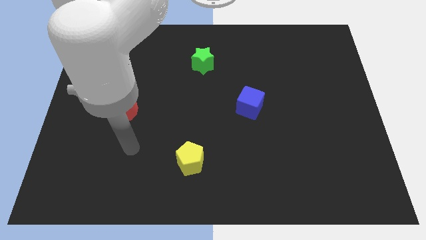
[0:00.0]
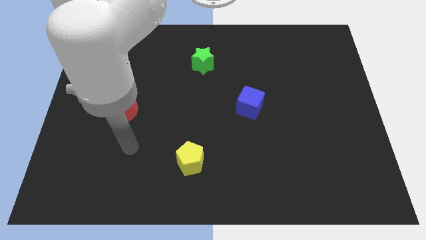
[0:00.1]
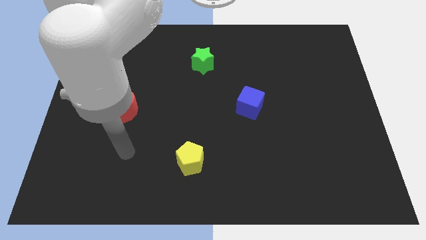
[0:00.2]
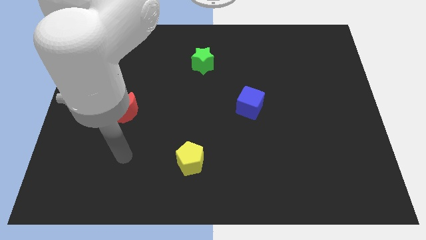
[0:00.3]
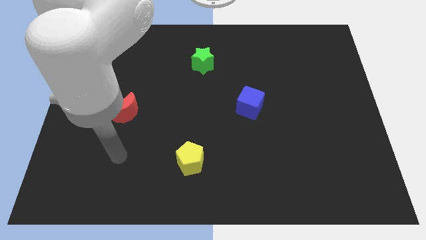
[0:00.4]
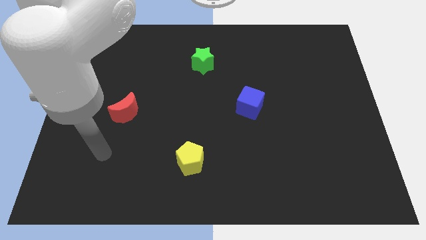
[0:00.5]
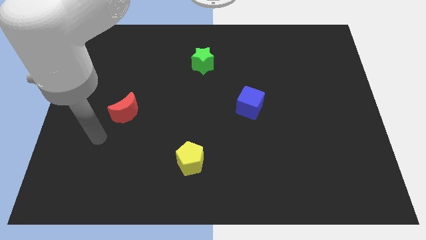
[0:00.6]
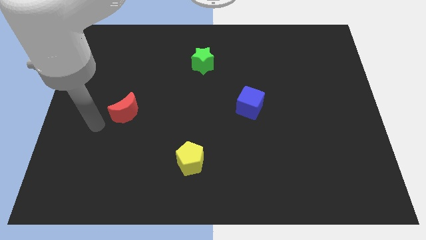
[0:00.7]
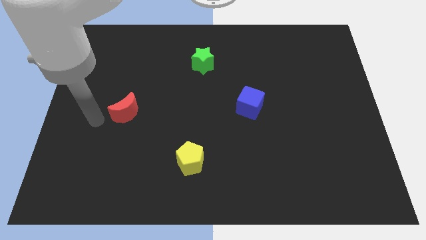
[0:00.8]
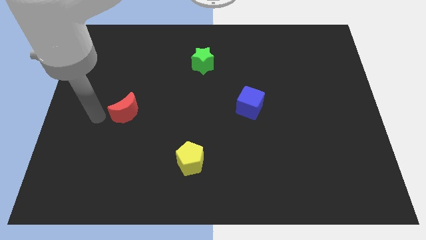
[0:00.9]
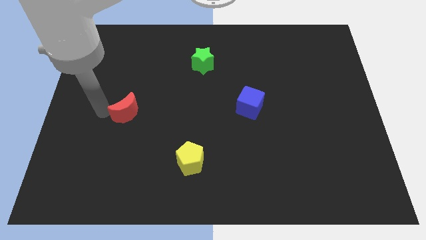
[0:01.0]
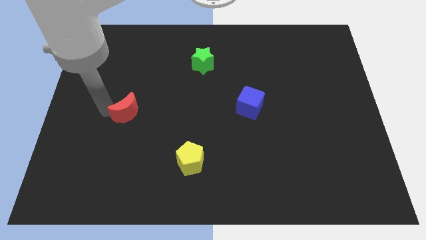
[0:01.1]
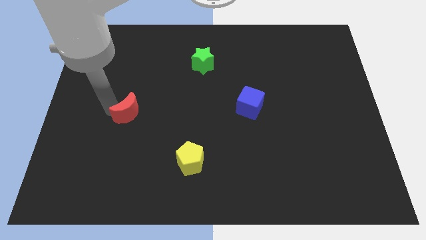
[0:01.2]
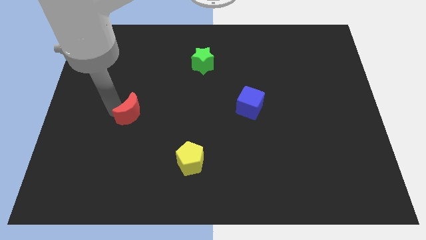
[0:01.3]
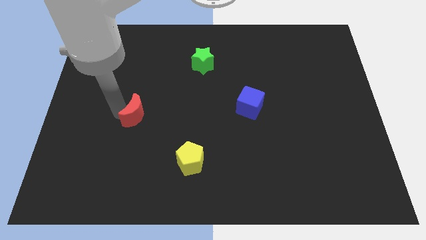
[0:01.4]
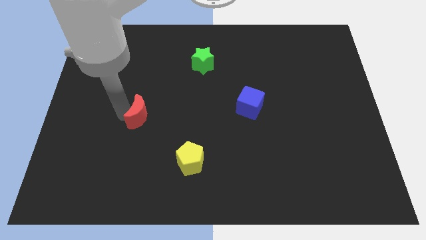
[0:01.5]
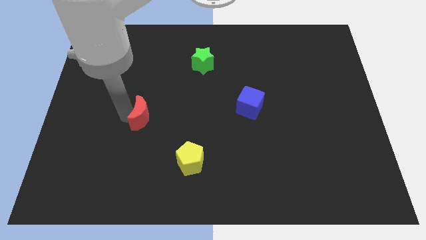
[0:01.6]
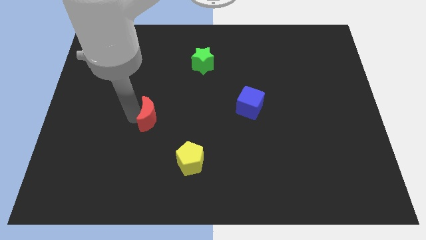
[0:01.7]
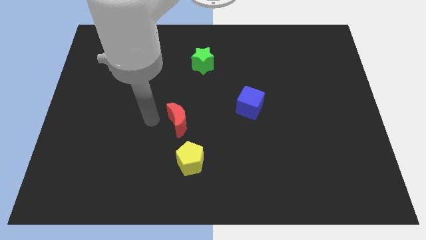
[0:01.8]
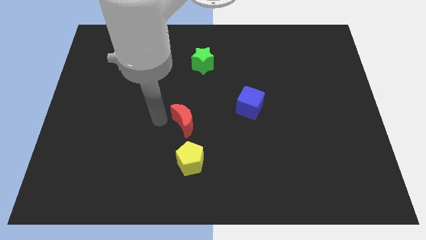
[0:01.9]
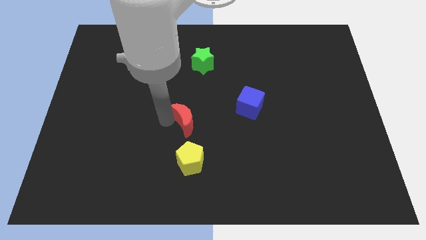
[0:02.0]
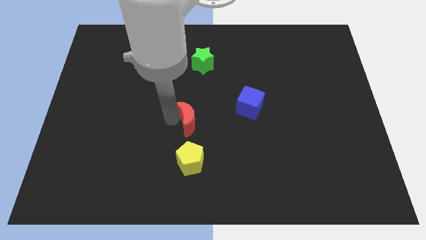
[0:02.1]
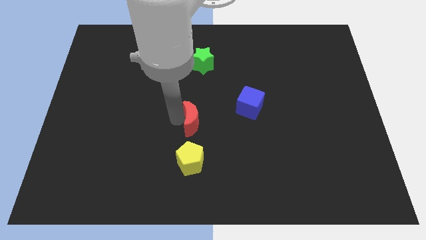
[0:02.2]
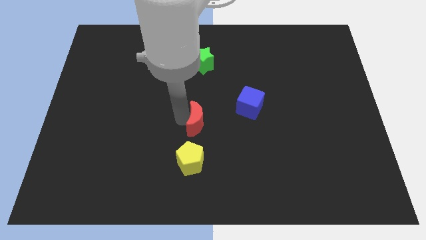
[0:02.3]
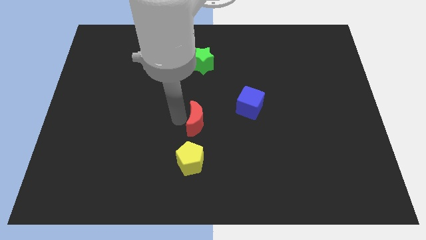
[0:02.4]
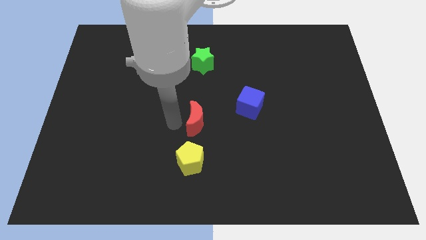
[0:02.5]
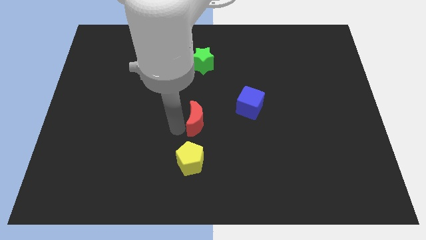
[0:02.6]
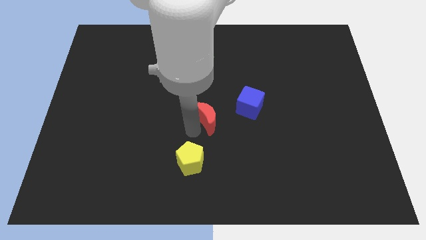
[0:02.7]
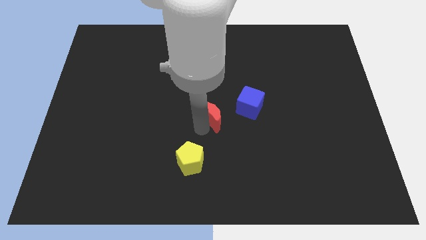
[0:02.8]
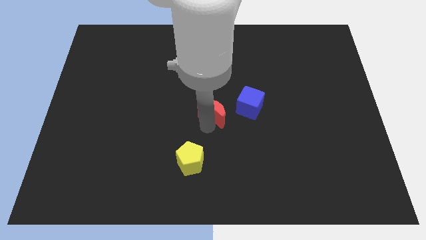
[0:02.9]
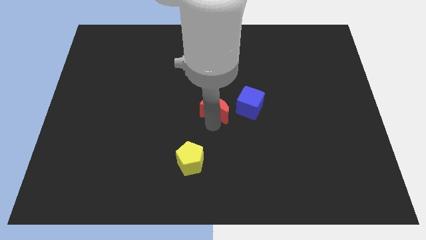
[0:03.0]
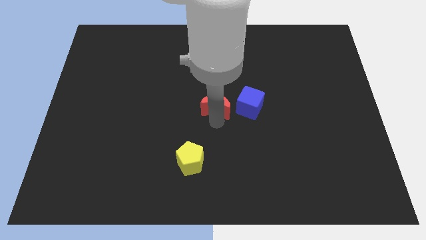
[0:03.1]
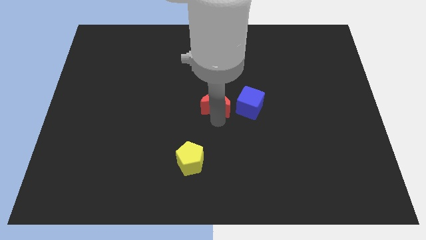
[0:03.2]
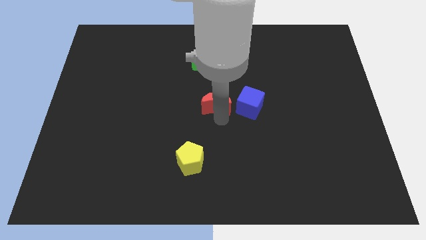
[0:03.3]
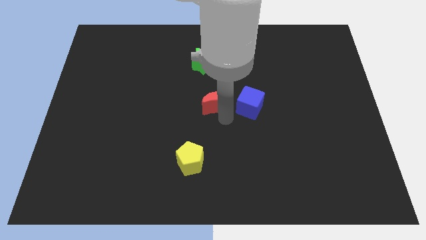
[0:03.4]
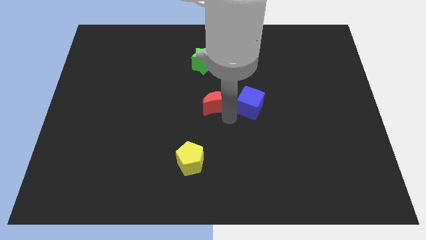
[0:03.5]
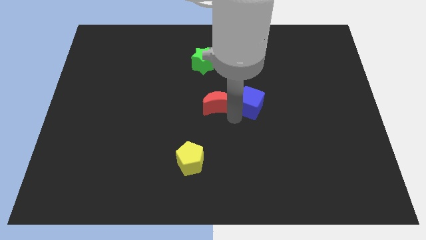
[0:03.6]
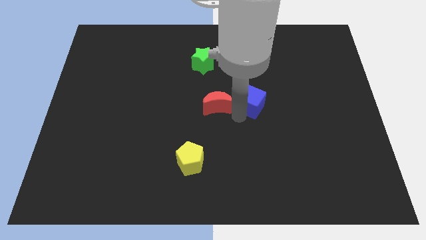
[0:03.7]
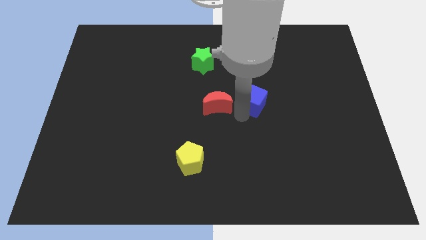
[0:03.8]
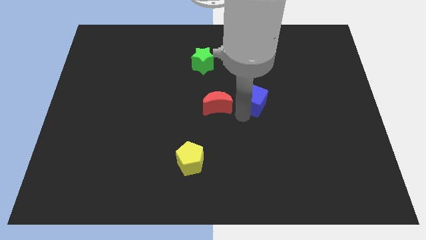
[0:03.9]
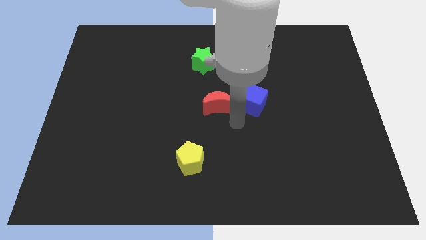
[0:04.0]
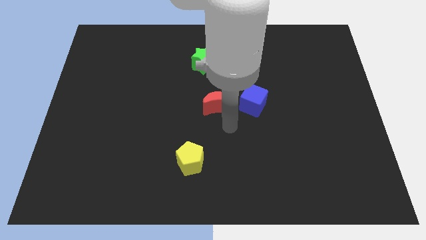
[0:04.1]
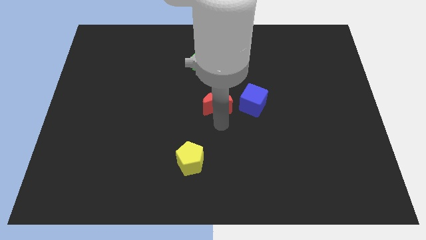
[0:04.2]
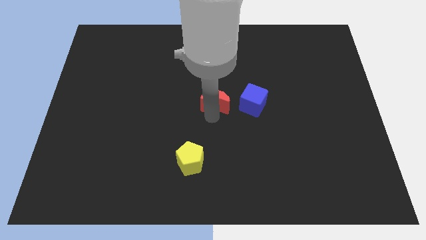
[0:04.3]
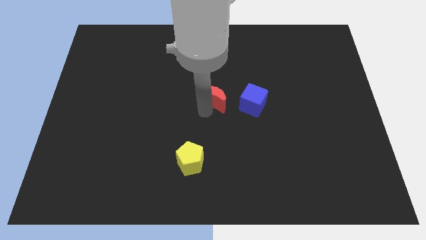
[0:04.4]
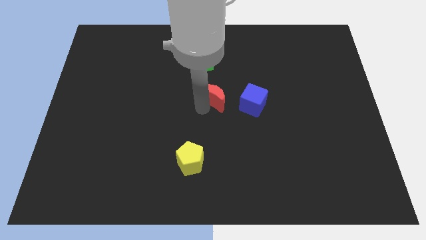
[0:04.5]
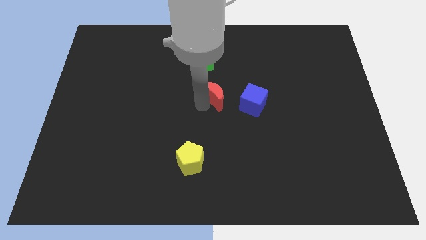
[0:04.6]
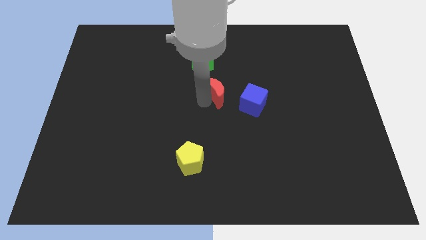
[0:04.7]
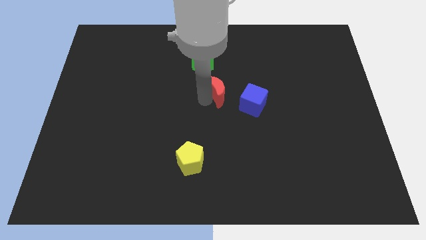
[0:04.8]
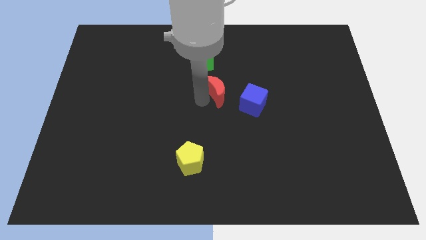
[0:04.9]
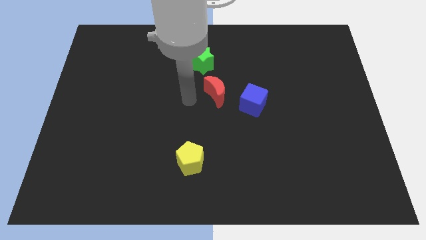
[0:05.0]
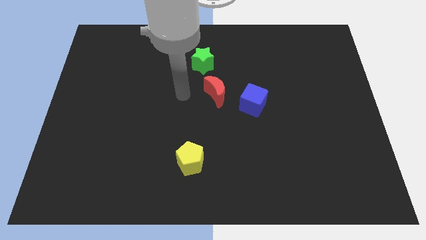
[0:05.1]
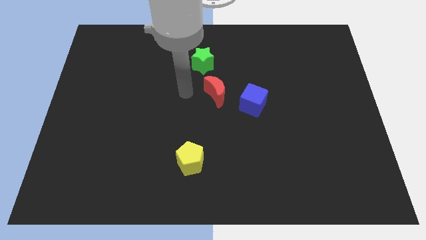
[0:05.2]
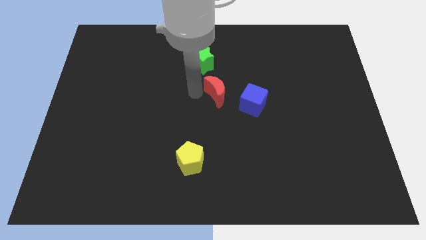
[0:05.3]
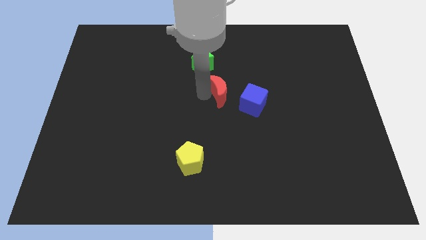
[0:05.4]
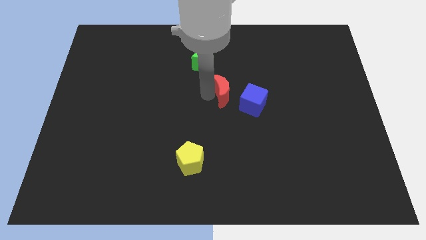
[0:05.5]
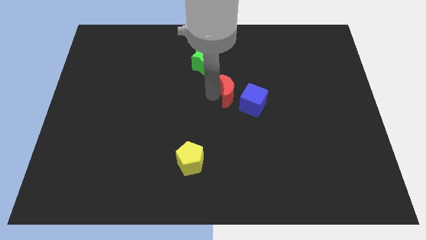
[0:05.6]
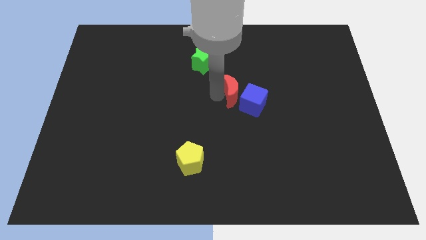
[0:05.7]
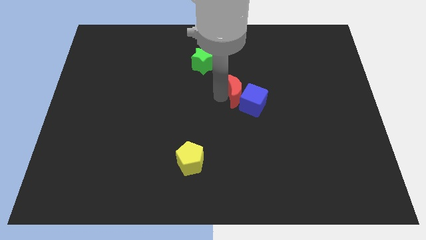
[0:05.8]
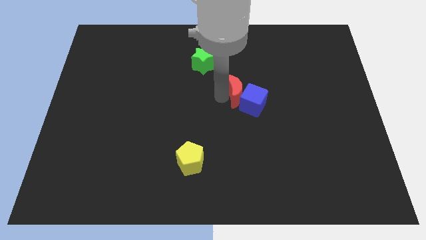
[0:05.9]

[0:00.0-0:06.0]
put the red moon towards the blue block

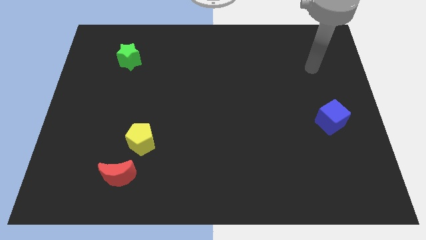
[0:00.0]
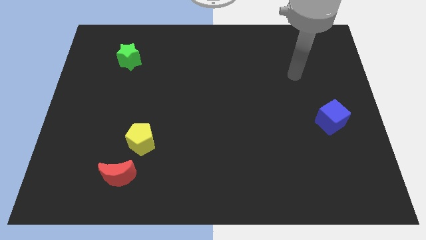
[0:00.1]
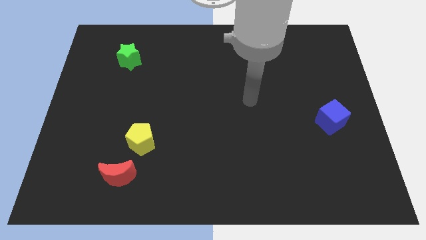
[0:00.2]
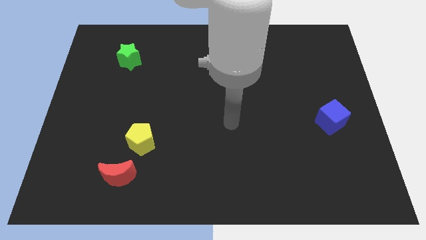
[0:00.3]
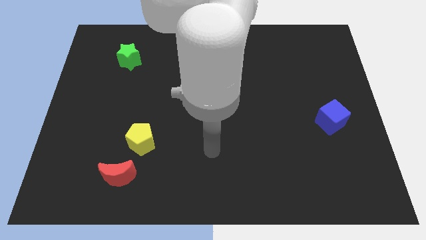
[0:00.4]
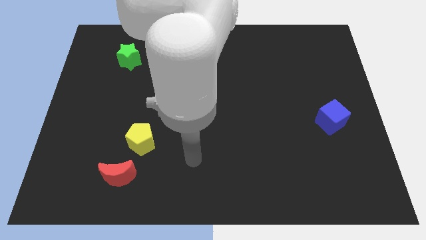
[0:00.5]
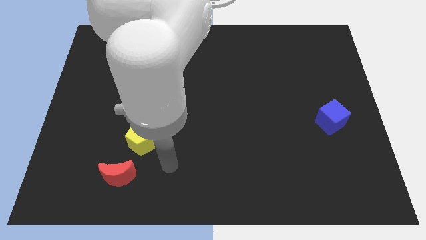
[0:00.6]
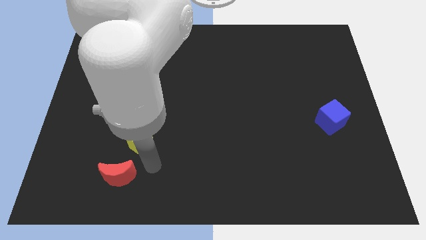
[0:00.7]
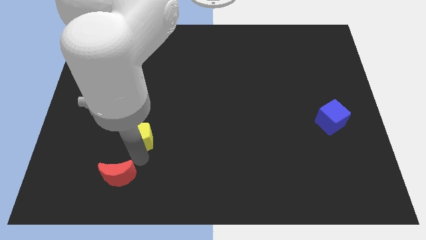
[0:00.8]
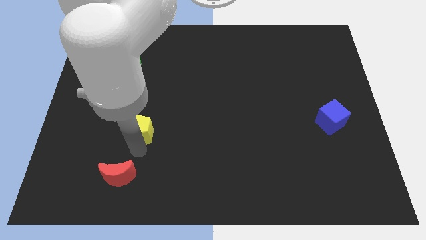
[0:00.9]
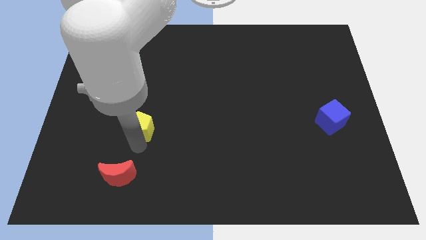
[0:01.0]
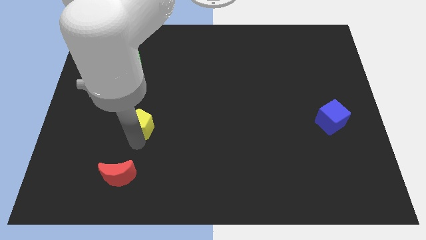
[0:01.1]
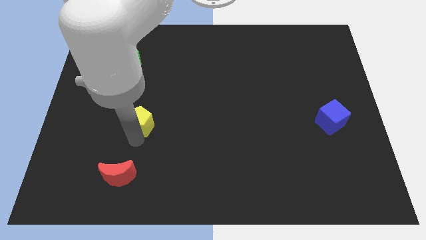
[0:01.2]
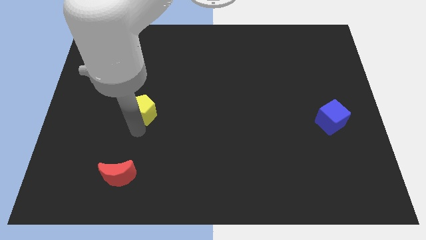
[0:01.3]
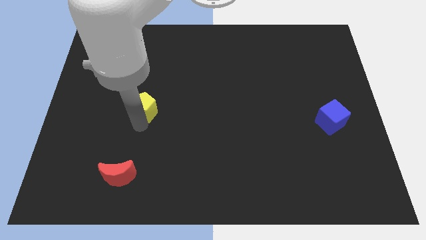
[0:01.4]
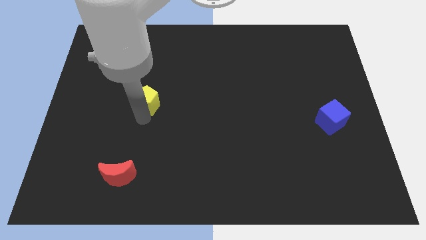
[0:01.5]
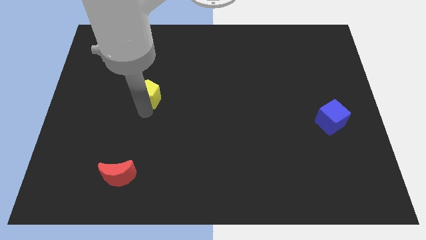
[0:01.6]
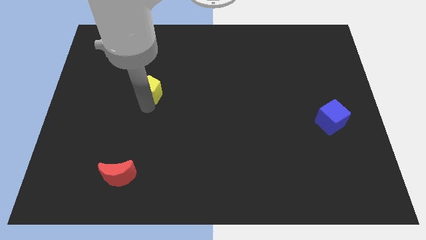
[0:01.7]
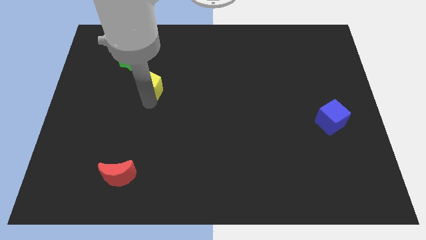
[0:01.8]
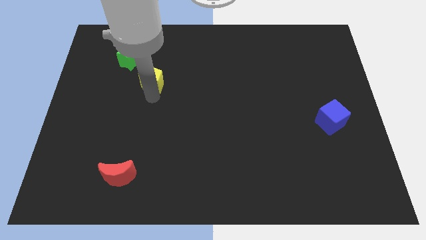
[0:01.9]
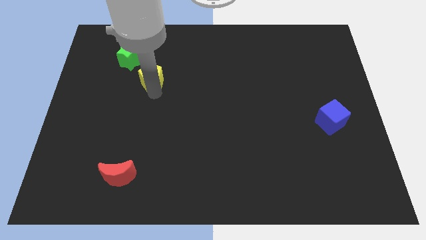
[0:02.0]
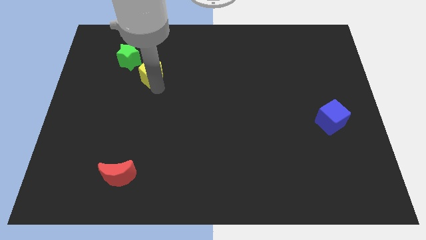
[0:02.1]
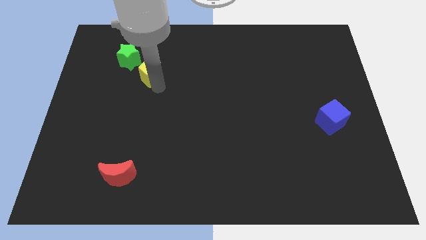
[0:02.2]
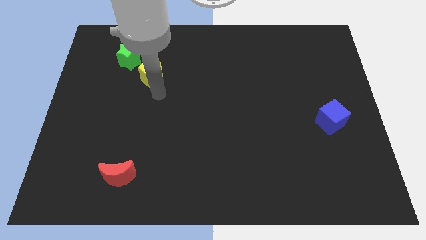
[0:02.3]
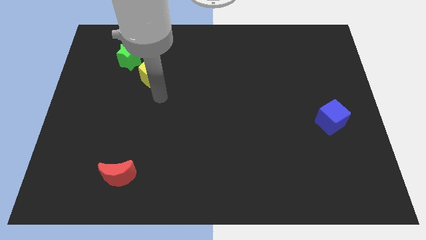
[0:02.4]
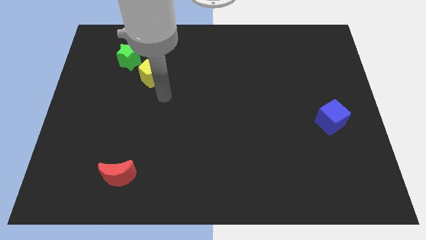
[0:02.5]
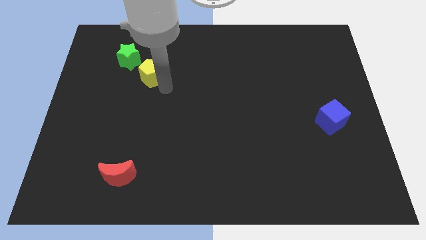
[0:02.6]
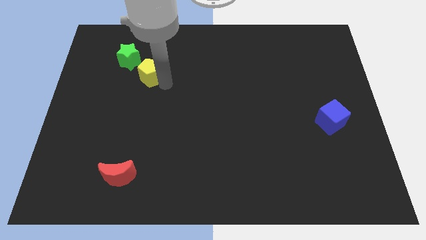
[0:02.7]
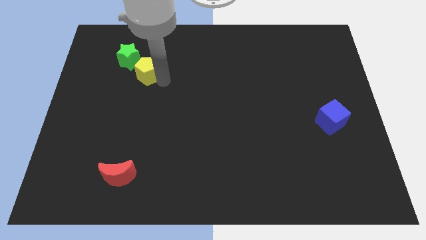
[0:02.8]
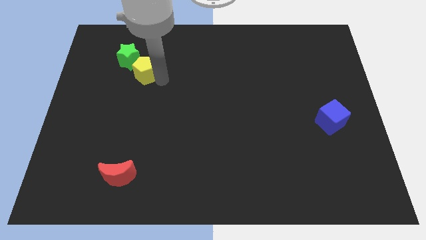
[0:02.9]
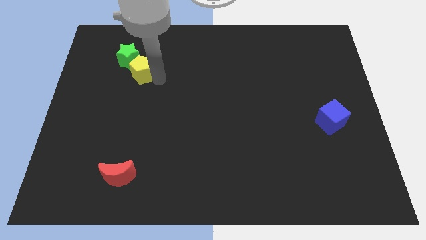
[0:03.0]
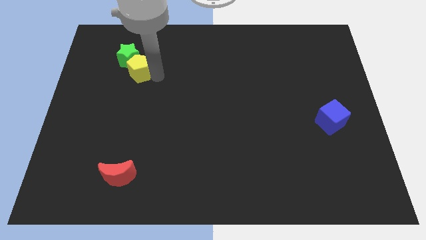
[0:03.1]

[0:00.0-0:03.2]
put the yellow pentagon to the green star
